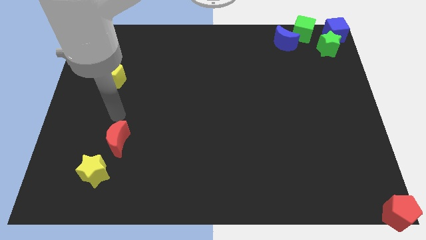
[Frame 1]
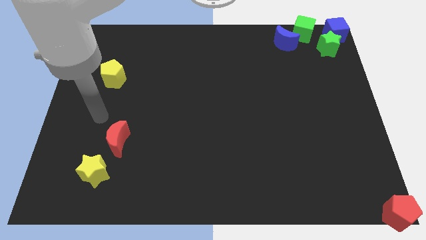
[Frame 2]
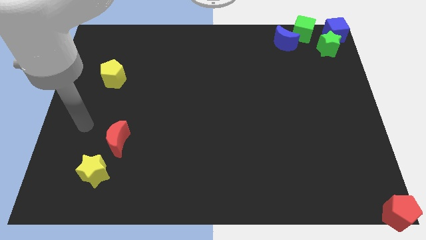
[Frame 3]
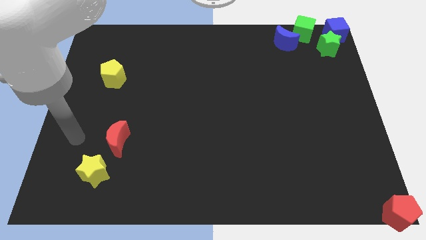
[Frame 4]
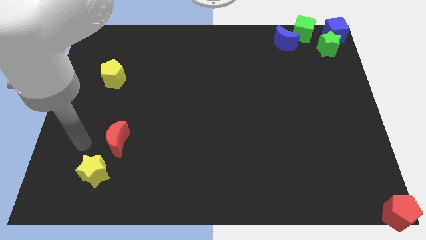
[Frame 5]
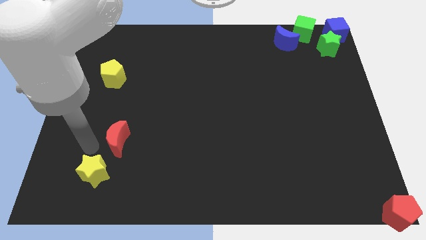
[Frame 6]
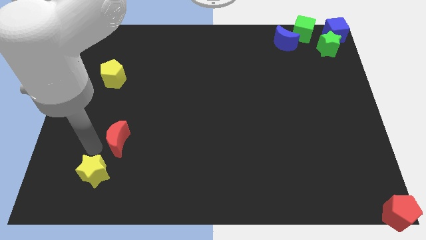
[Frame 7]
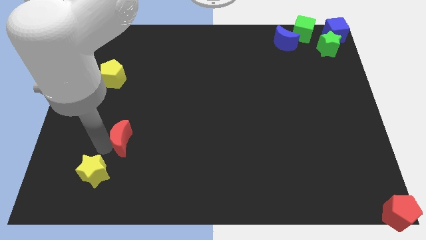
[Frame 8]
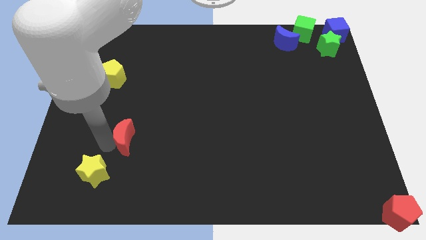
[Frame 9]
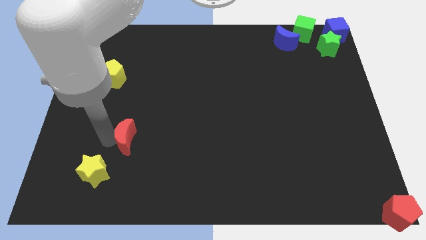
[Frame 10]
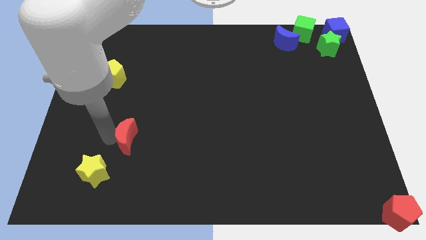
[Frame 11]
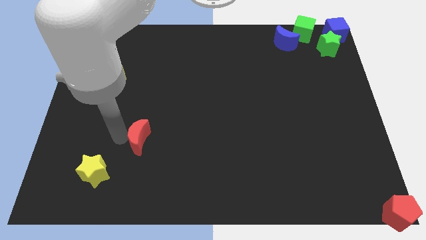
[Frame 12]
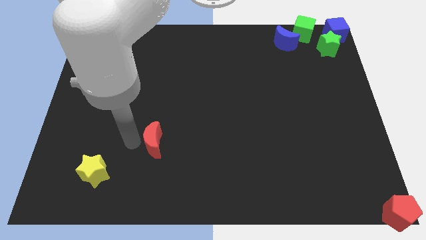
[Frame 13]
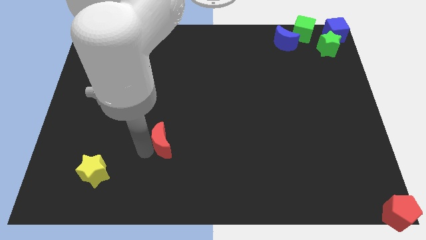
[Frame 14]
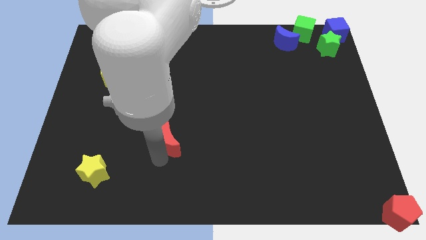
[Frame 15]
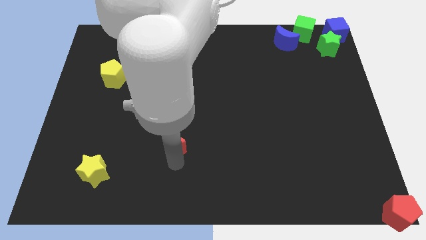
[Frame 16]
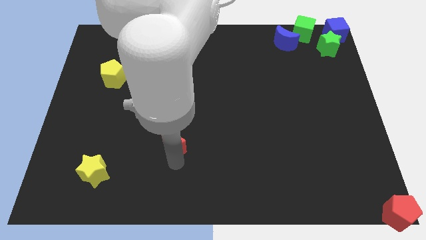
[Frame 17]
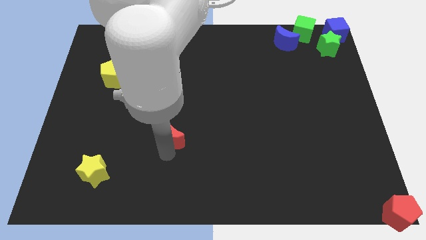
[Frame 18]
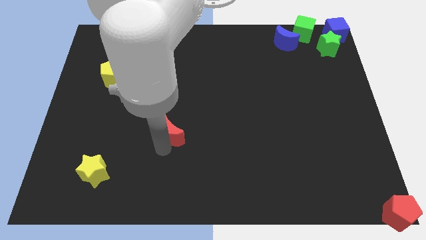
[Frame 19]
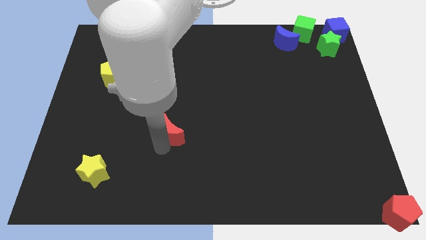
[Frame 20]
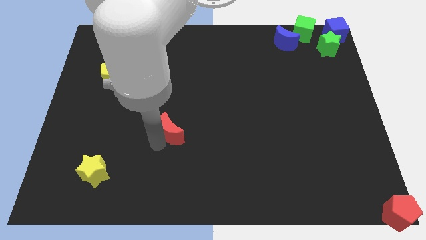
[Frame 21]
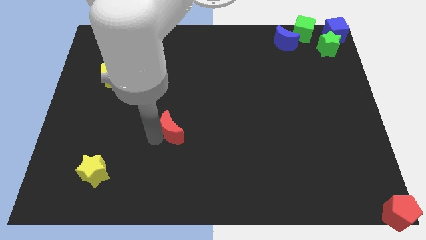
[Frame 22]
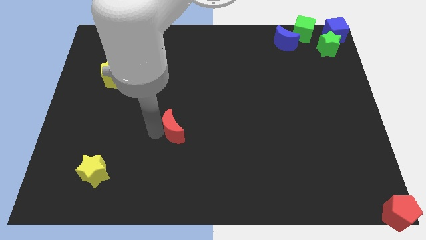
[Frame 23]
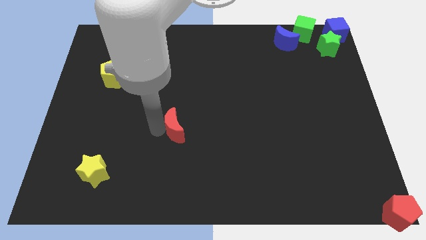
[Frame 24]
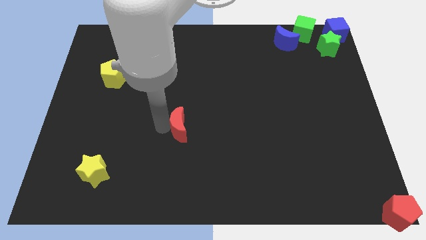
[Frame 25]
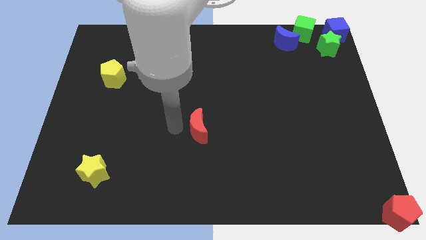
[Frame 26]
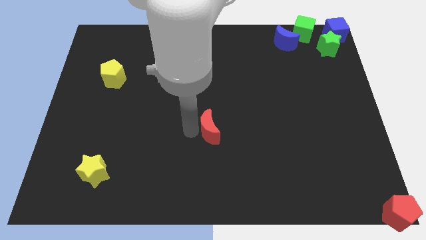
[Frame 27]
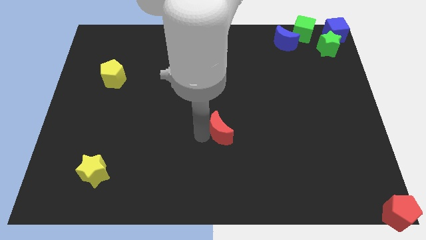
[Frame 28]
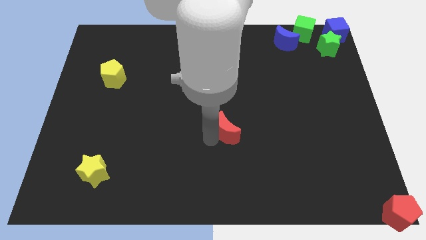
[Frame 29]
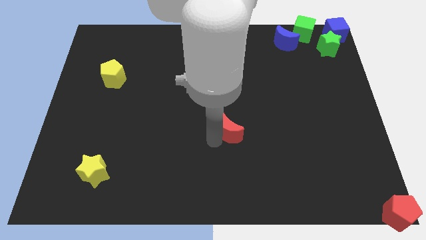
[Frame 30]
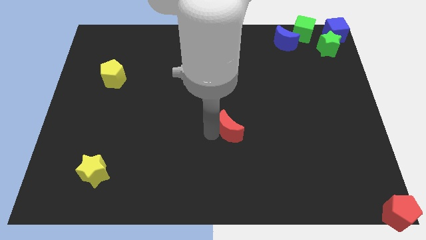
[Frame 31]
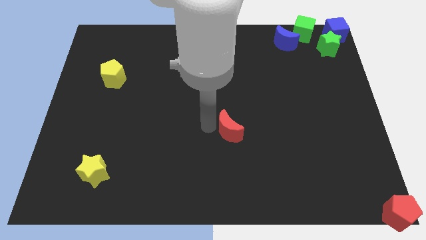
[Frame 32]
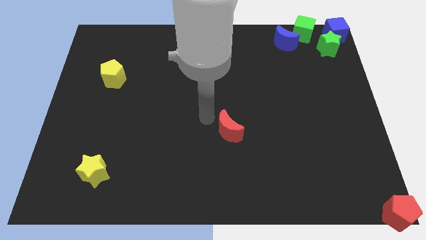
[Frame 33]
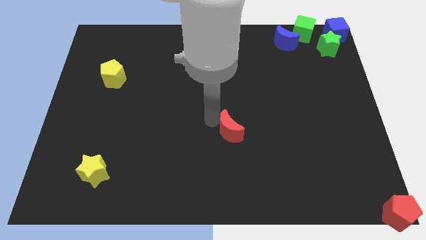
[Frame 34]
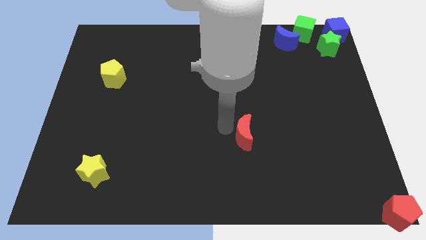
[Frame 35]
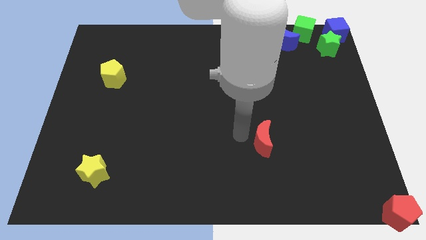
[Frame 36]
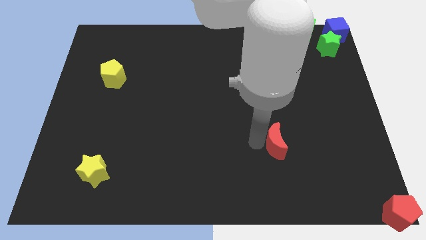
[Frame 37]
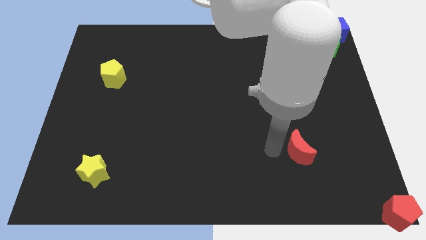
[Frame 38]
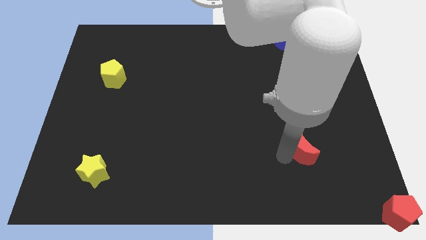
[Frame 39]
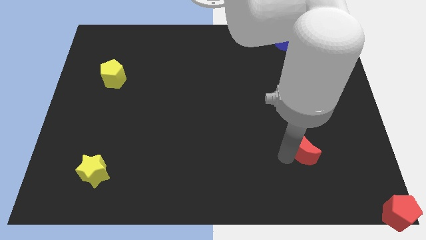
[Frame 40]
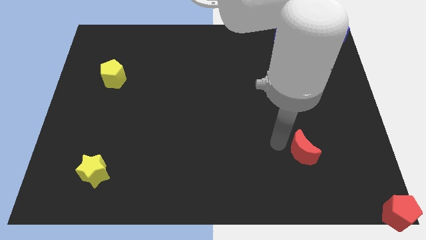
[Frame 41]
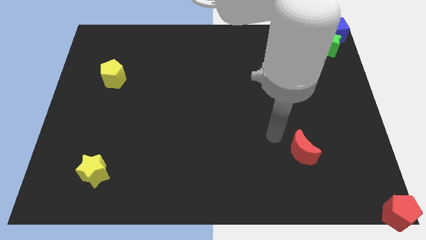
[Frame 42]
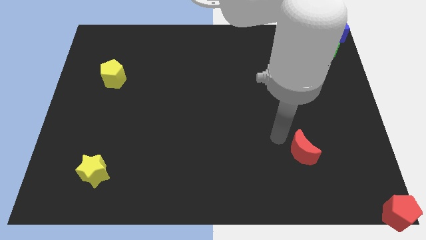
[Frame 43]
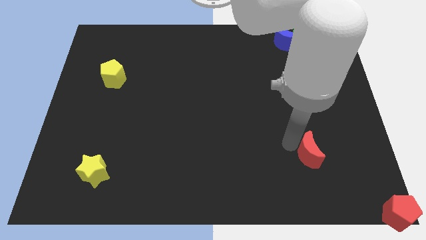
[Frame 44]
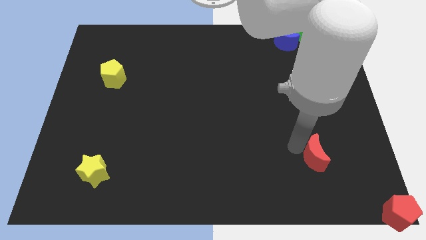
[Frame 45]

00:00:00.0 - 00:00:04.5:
place the red moon diagonally top left to red pentagon

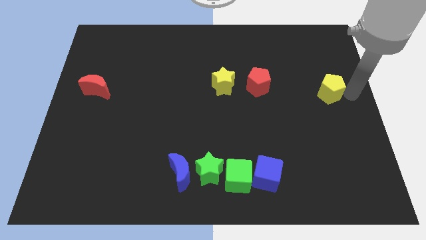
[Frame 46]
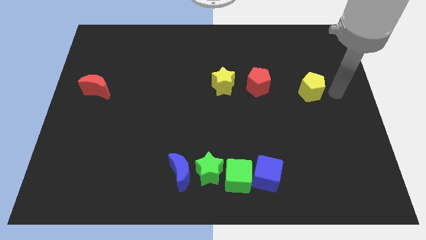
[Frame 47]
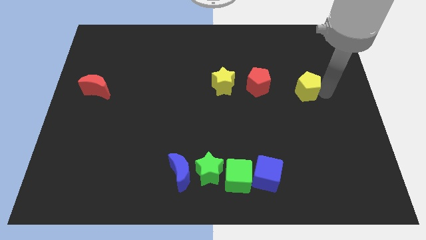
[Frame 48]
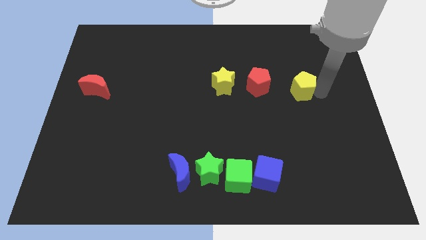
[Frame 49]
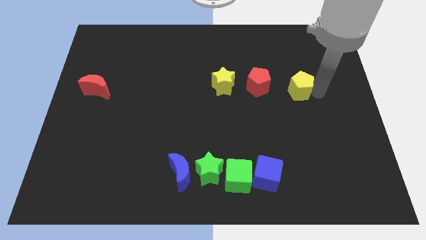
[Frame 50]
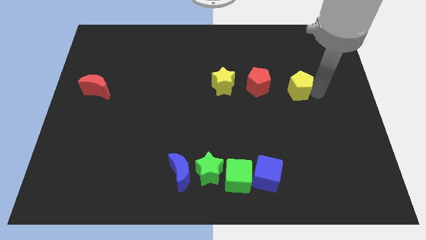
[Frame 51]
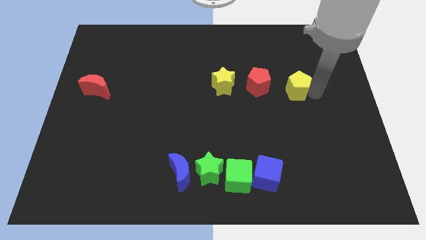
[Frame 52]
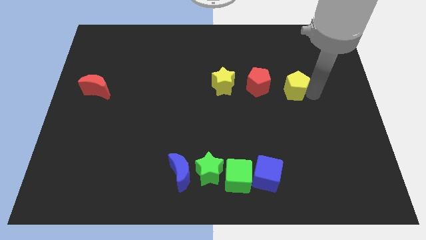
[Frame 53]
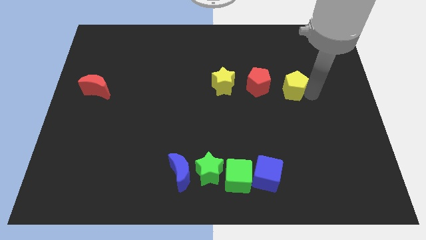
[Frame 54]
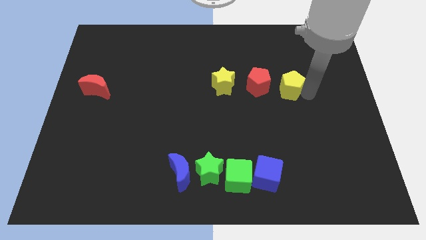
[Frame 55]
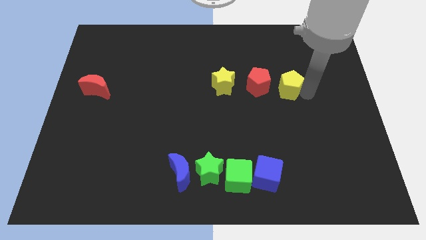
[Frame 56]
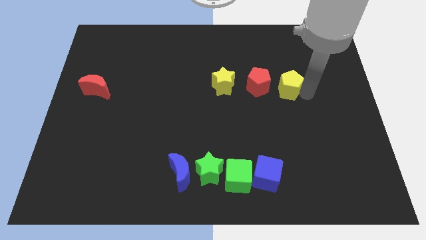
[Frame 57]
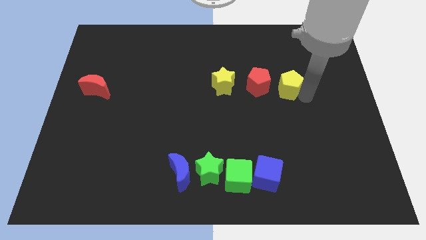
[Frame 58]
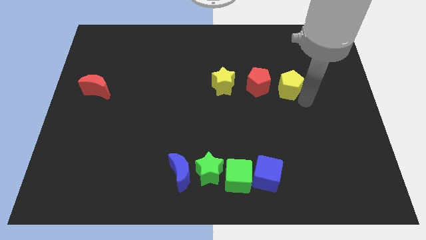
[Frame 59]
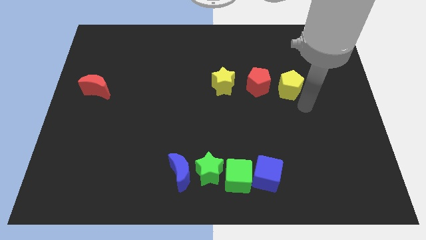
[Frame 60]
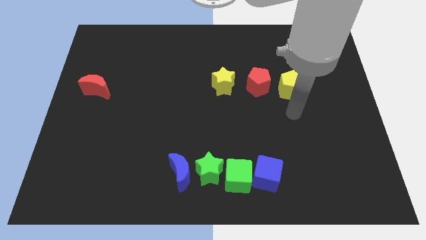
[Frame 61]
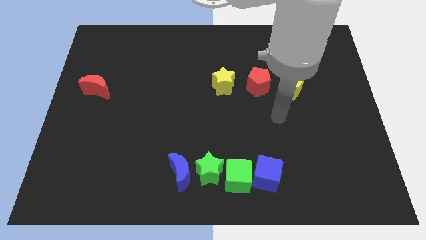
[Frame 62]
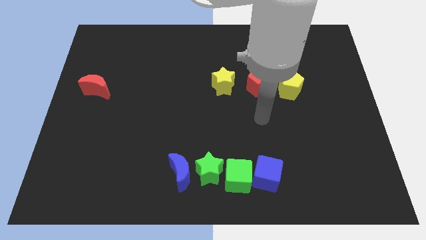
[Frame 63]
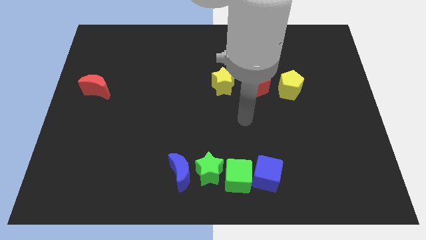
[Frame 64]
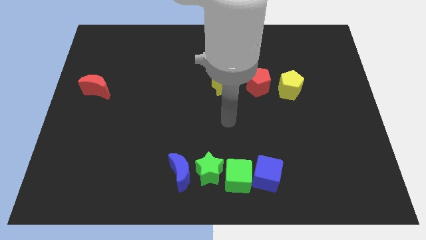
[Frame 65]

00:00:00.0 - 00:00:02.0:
push the yellow pentagon towards red pentagon

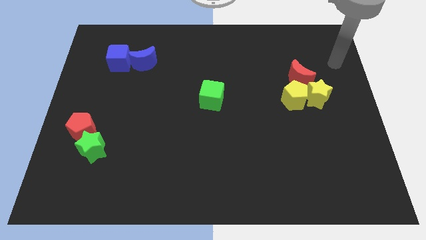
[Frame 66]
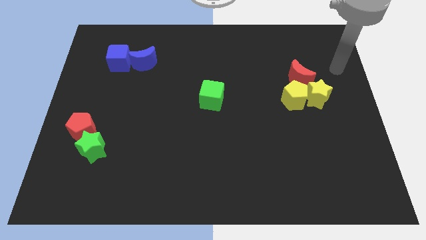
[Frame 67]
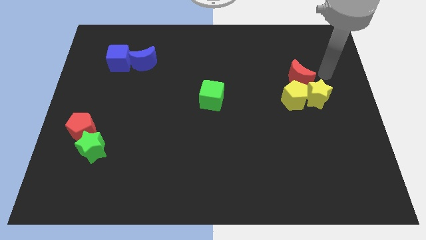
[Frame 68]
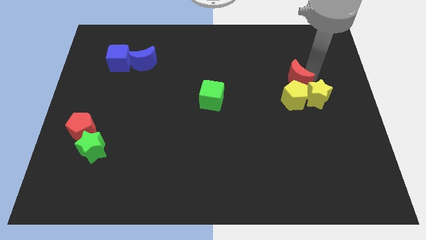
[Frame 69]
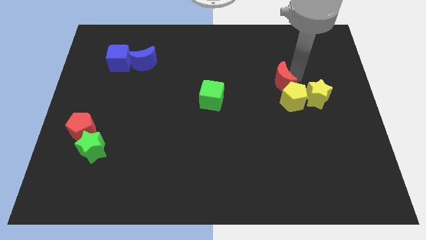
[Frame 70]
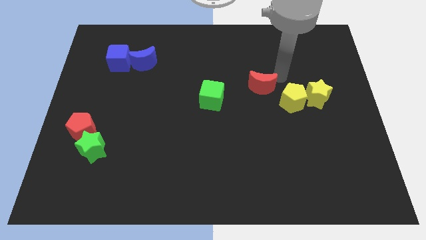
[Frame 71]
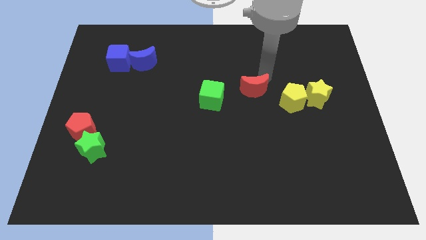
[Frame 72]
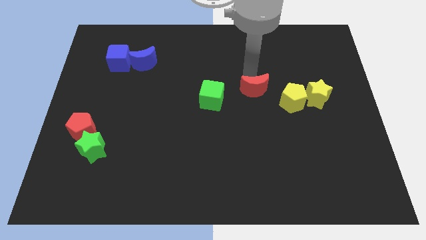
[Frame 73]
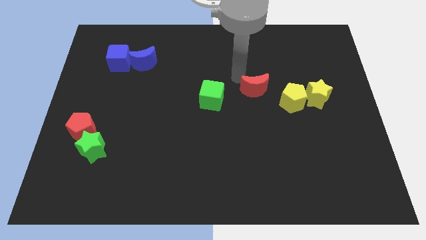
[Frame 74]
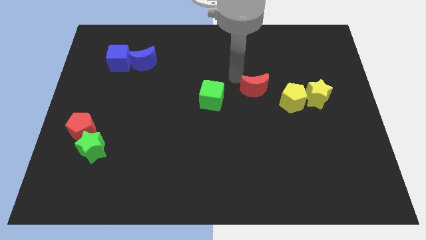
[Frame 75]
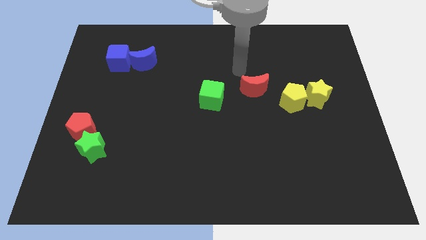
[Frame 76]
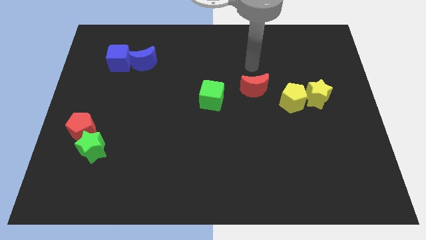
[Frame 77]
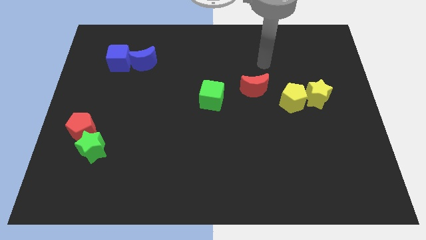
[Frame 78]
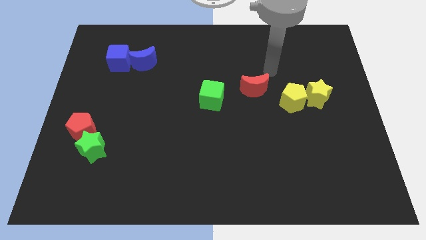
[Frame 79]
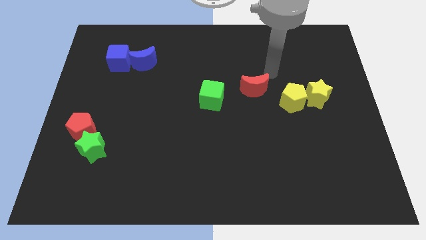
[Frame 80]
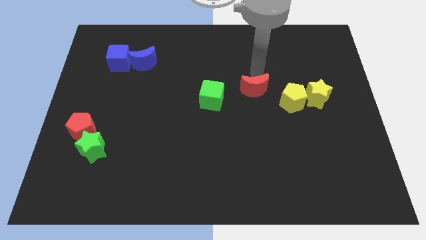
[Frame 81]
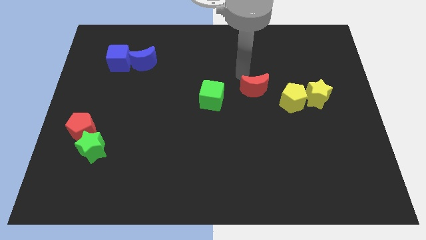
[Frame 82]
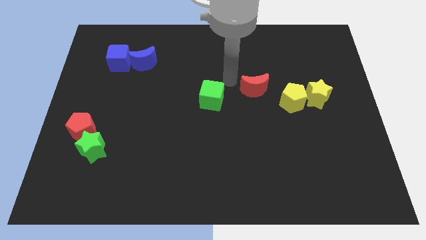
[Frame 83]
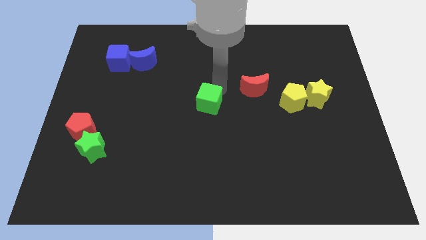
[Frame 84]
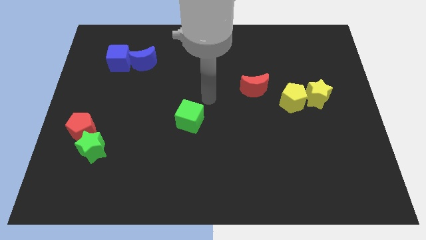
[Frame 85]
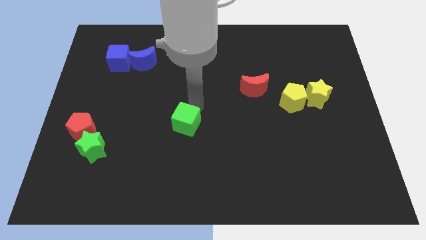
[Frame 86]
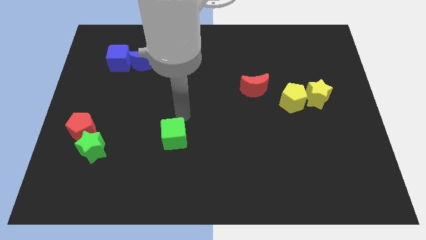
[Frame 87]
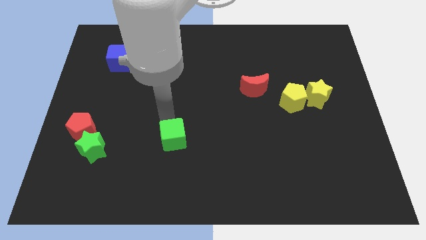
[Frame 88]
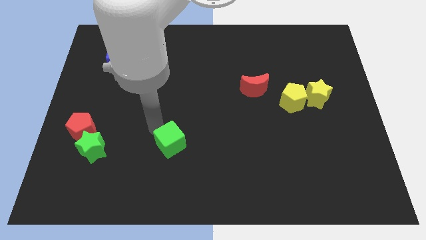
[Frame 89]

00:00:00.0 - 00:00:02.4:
push green cube slightly downwards
